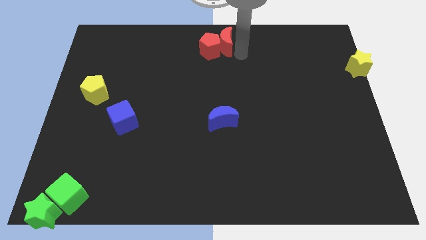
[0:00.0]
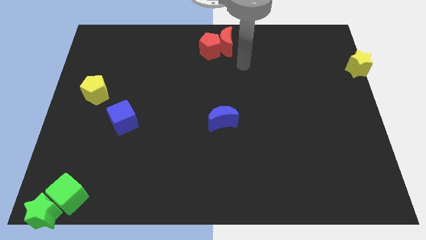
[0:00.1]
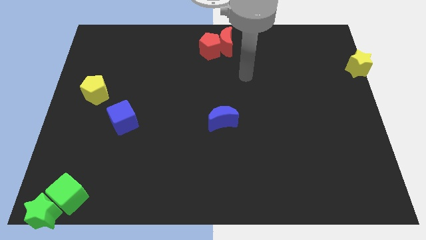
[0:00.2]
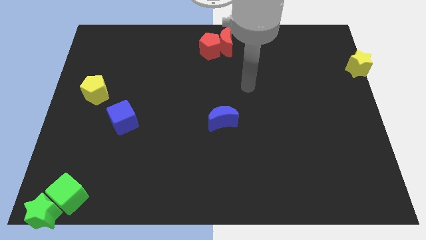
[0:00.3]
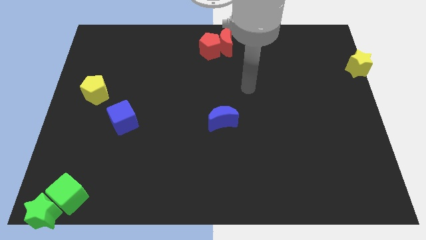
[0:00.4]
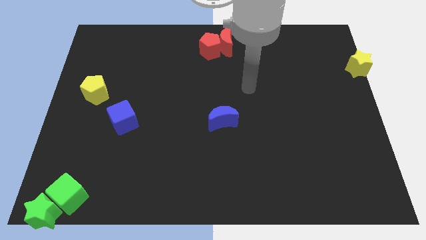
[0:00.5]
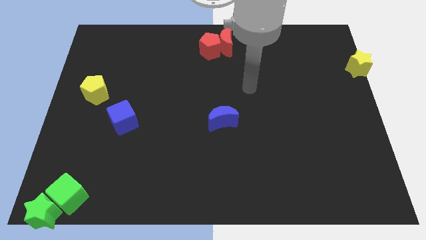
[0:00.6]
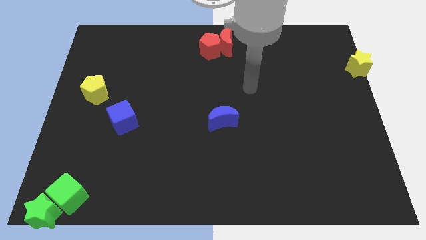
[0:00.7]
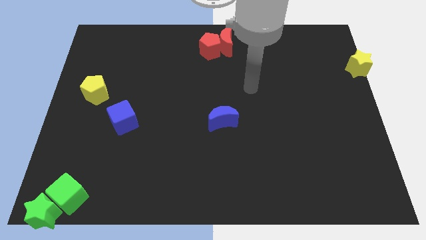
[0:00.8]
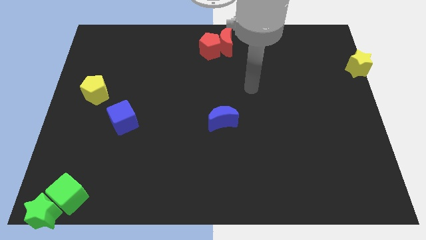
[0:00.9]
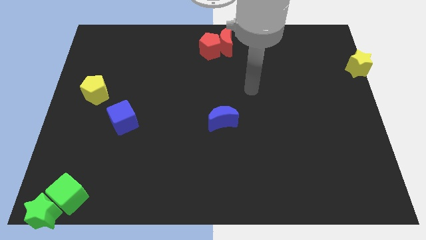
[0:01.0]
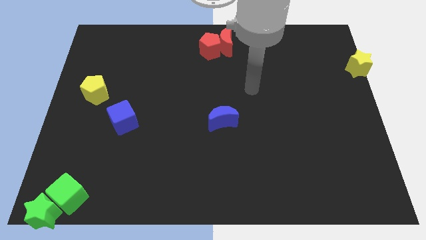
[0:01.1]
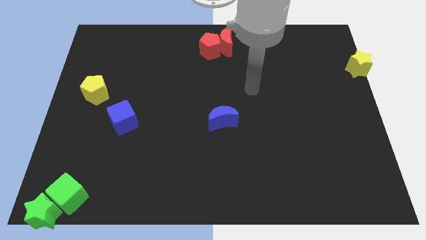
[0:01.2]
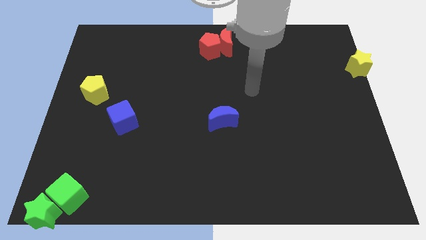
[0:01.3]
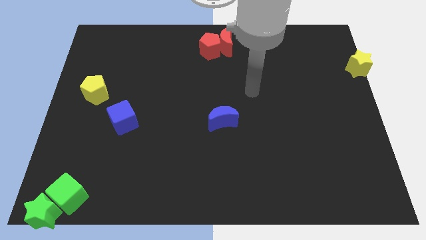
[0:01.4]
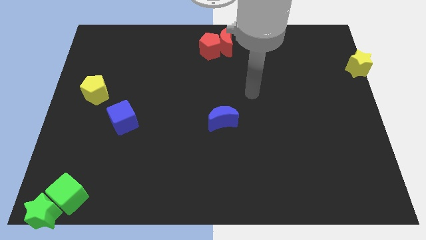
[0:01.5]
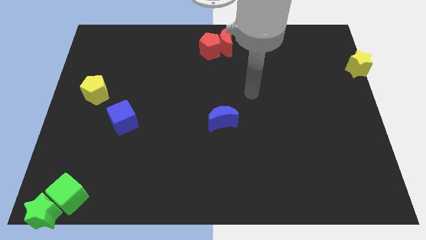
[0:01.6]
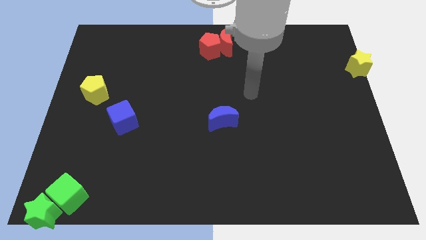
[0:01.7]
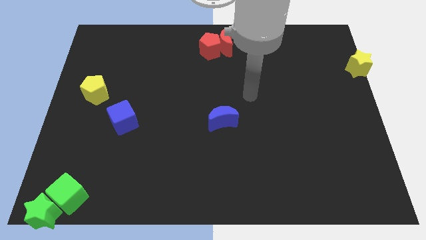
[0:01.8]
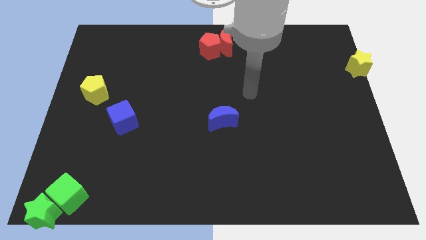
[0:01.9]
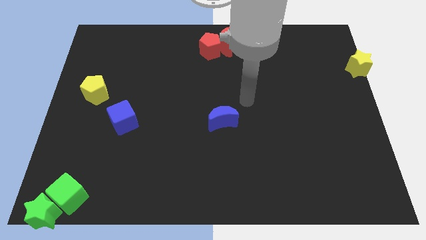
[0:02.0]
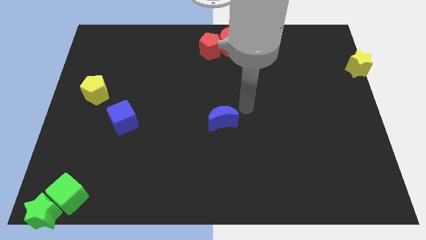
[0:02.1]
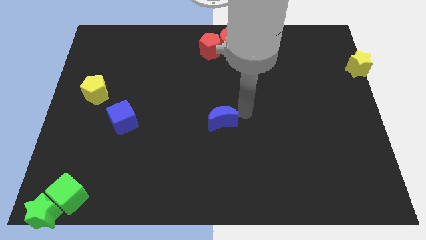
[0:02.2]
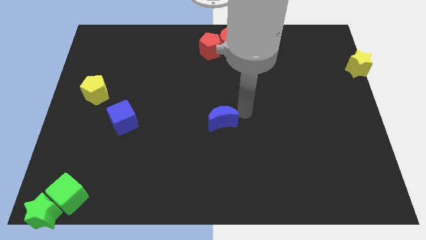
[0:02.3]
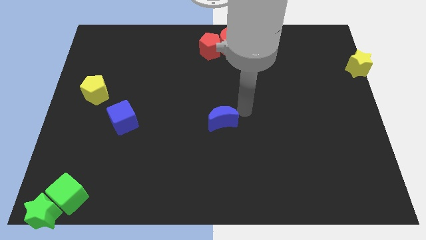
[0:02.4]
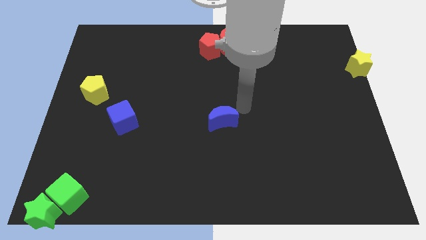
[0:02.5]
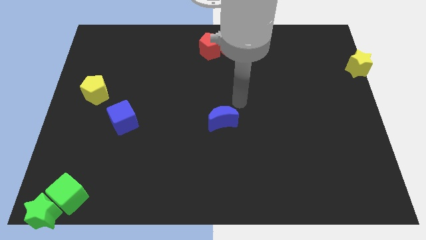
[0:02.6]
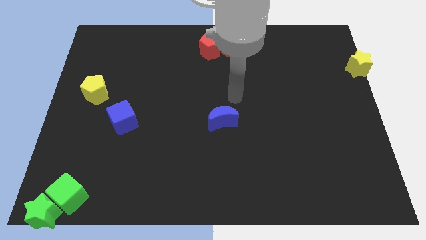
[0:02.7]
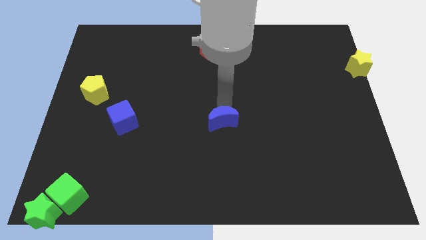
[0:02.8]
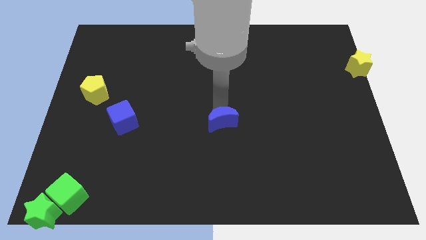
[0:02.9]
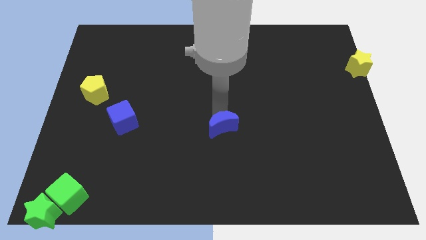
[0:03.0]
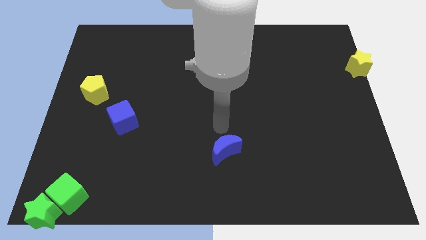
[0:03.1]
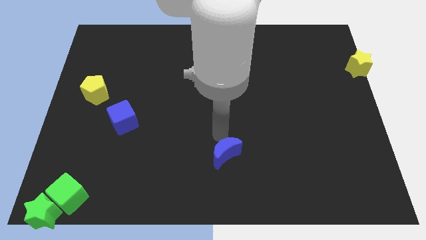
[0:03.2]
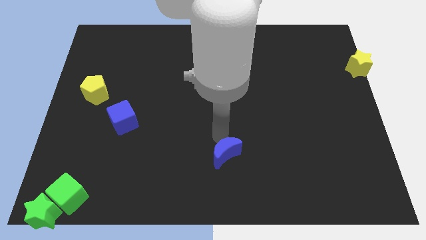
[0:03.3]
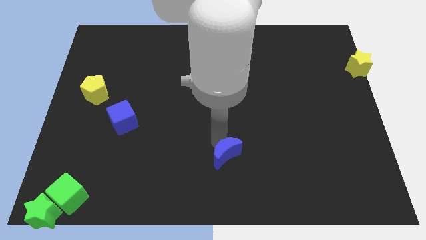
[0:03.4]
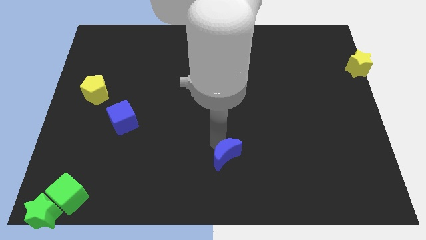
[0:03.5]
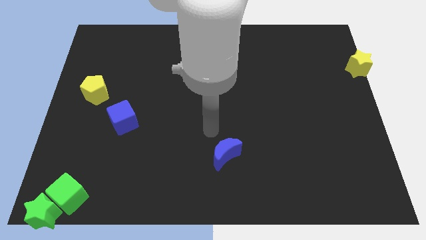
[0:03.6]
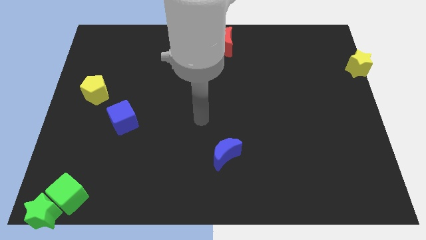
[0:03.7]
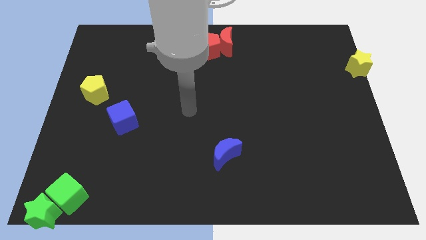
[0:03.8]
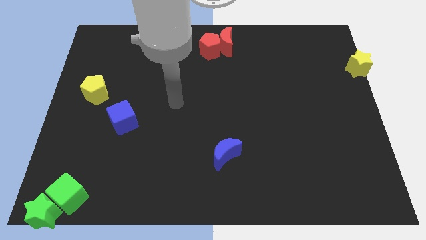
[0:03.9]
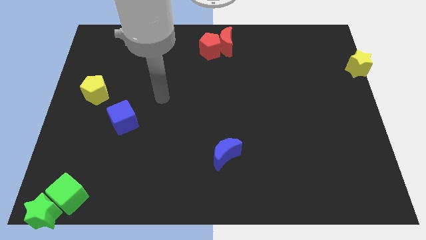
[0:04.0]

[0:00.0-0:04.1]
push blue crescent slightly to the bottom

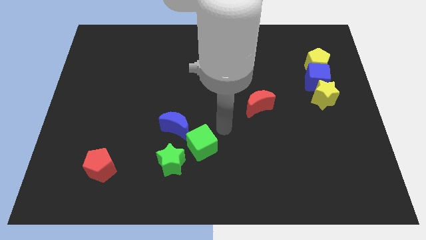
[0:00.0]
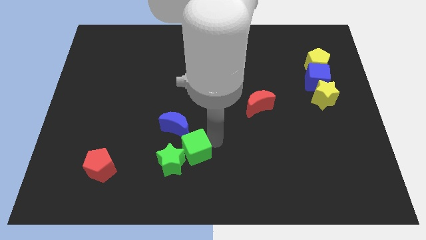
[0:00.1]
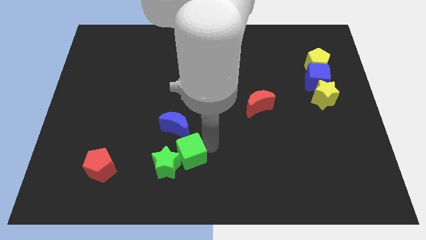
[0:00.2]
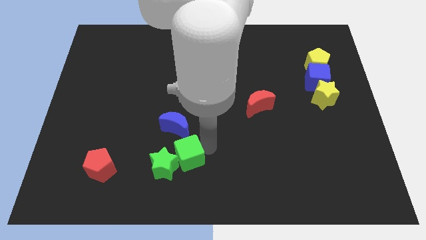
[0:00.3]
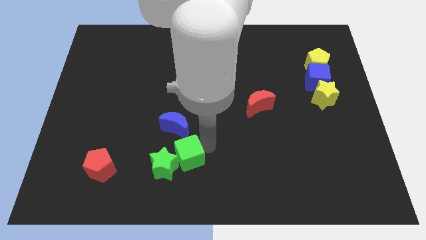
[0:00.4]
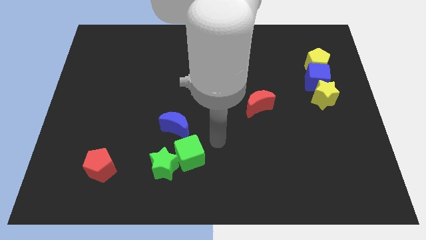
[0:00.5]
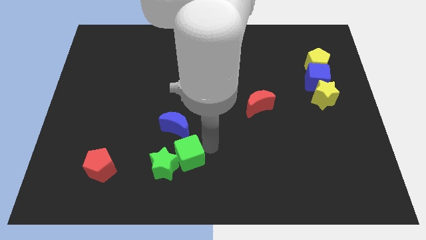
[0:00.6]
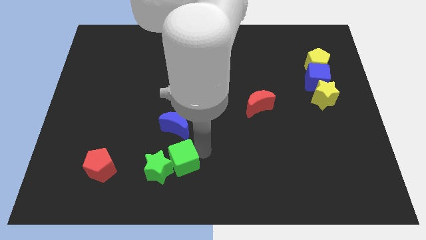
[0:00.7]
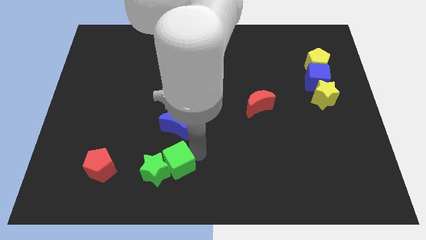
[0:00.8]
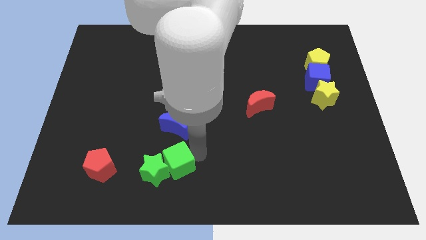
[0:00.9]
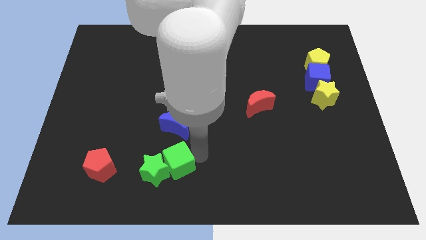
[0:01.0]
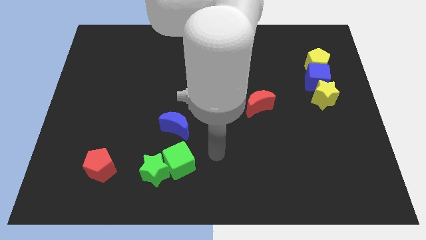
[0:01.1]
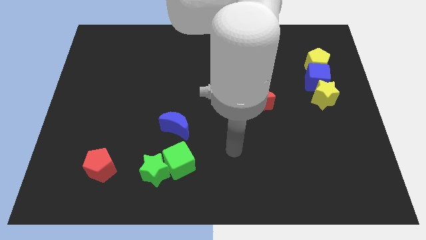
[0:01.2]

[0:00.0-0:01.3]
put the green cube below the green star

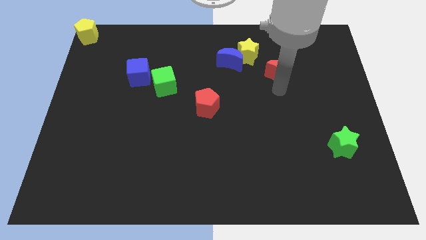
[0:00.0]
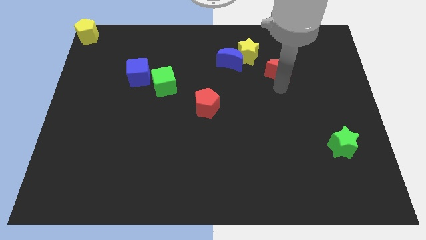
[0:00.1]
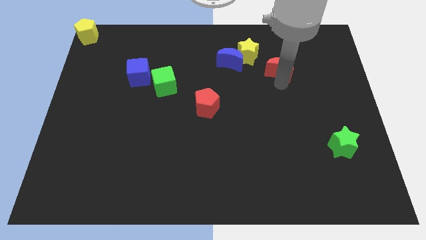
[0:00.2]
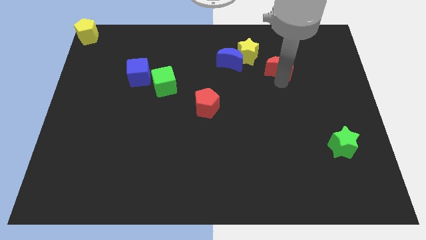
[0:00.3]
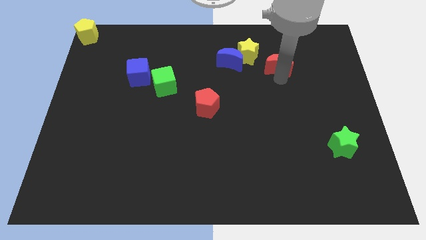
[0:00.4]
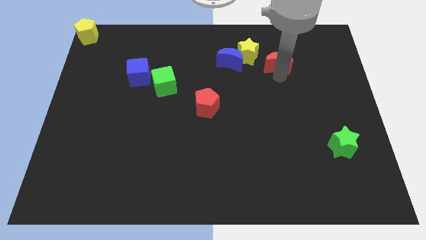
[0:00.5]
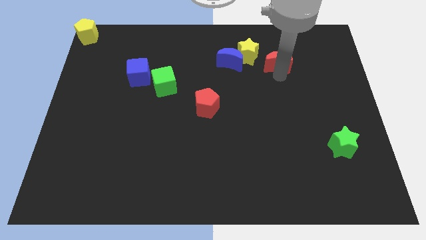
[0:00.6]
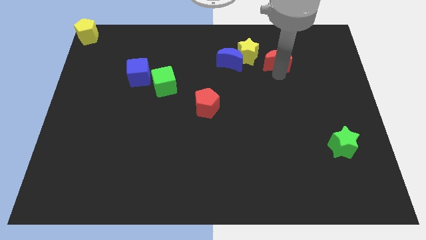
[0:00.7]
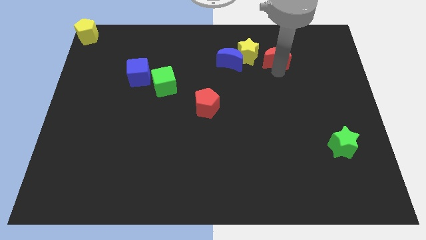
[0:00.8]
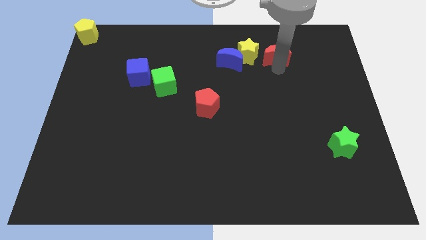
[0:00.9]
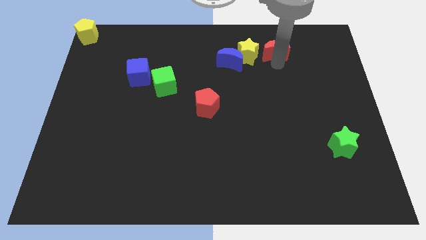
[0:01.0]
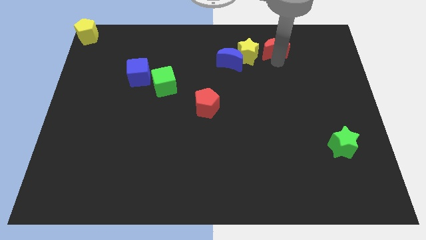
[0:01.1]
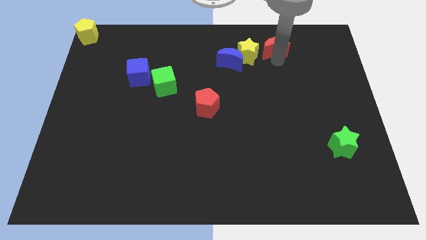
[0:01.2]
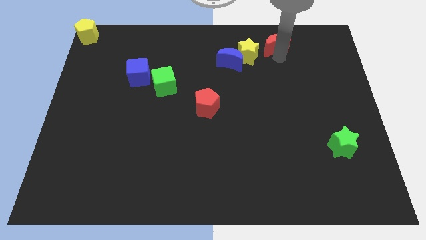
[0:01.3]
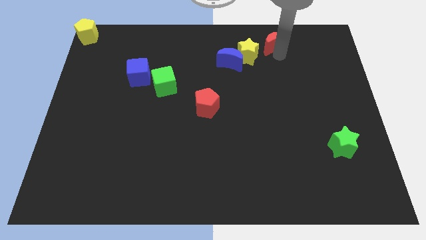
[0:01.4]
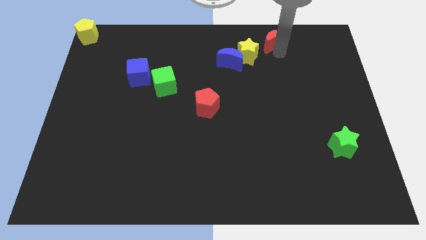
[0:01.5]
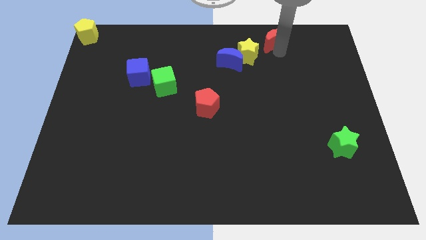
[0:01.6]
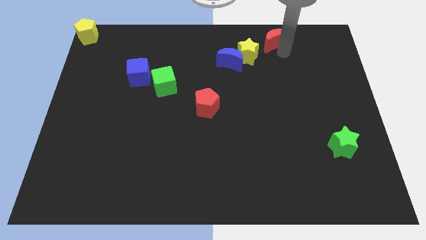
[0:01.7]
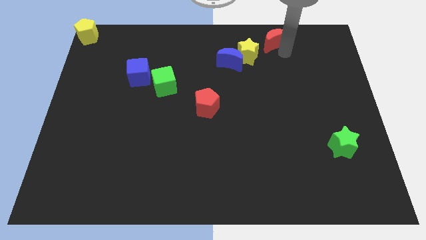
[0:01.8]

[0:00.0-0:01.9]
push the red crescent towards the diagonal top right corner yellow star

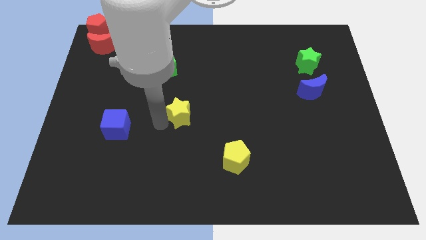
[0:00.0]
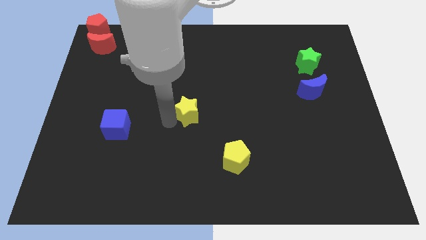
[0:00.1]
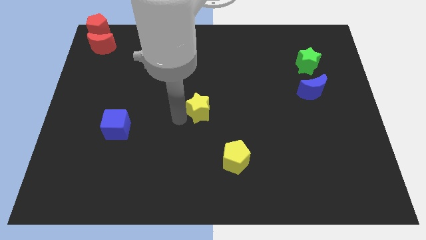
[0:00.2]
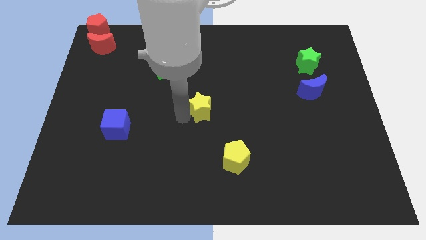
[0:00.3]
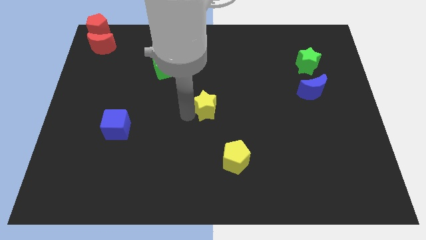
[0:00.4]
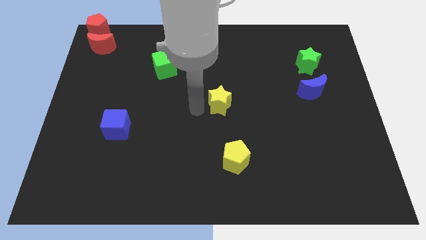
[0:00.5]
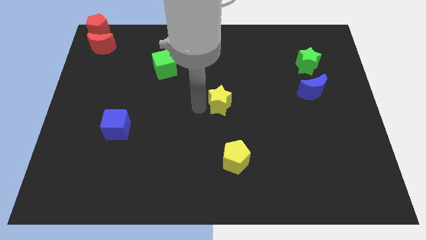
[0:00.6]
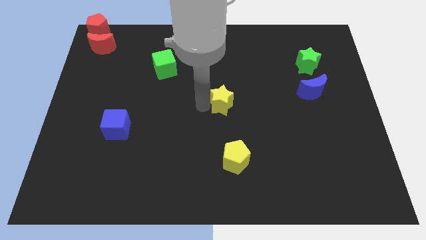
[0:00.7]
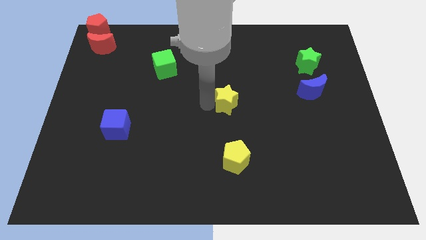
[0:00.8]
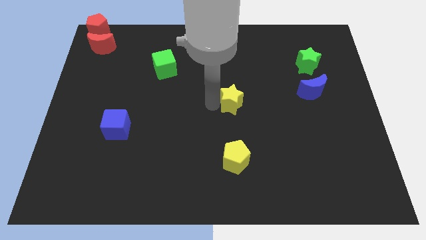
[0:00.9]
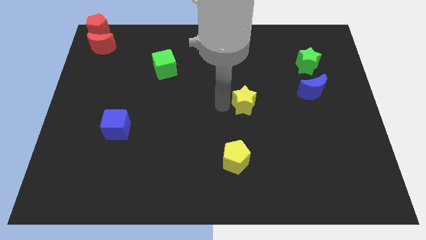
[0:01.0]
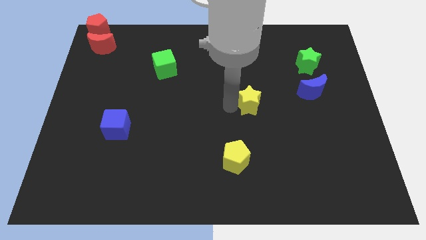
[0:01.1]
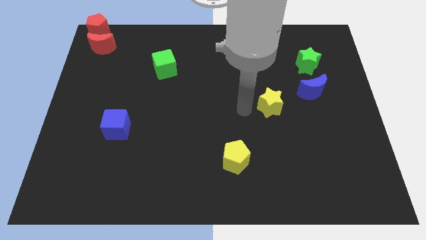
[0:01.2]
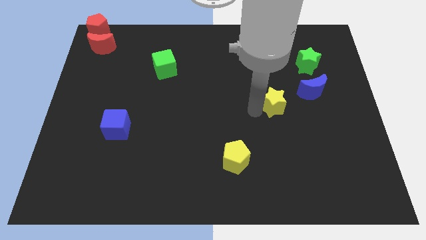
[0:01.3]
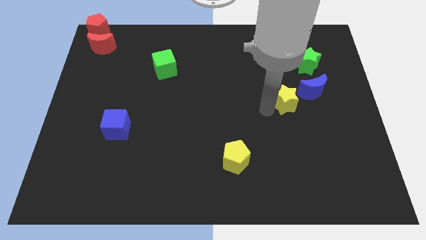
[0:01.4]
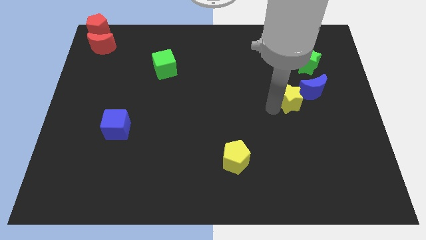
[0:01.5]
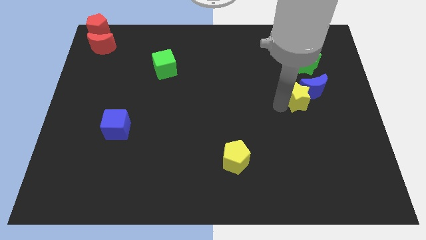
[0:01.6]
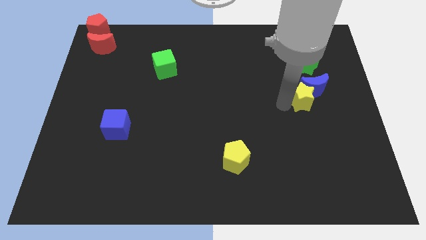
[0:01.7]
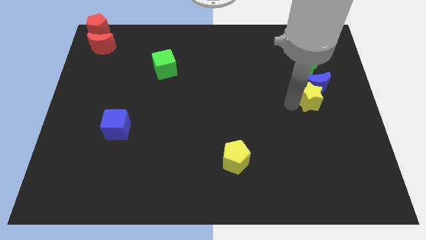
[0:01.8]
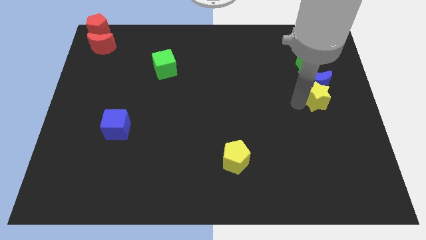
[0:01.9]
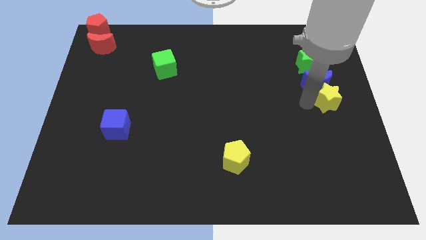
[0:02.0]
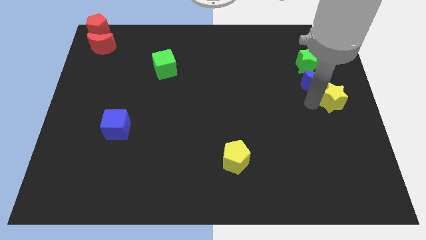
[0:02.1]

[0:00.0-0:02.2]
move the yellow star into the blue moon
